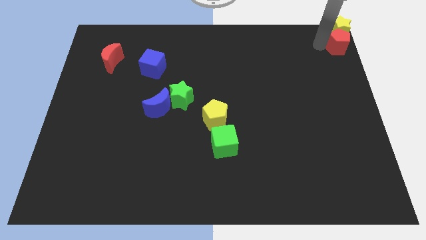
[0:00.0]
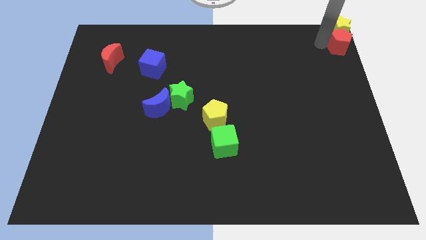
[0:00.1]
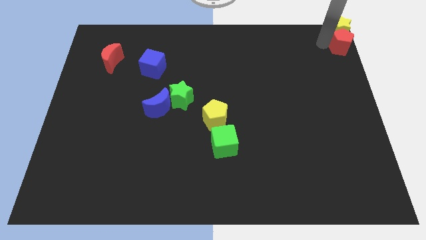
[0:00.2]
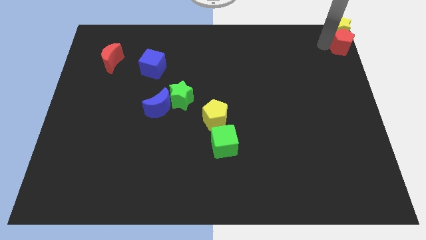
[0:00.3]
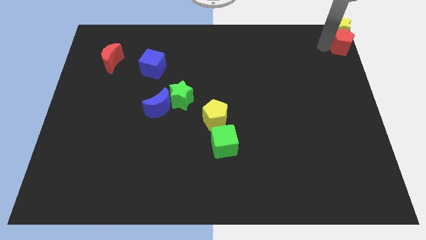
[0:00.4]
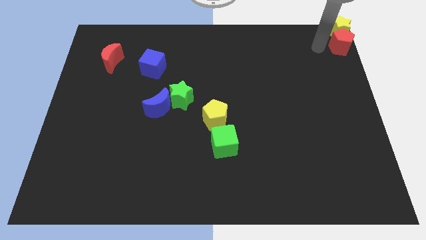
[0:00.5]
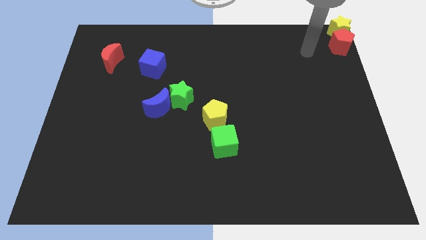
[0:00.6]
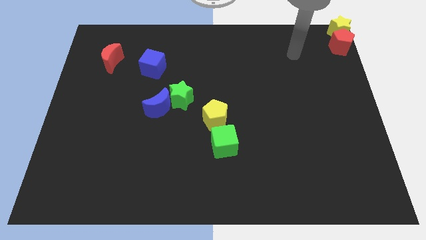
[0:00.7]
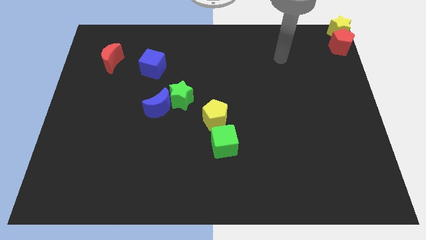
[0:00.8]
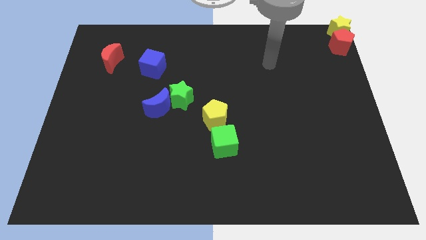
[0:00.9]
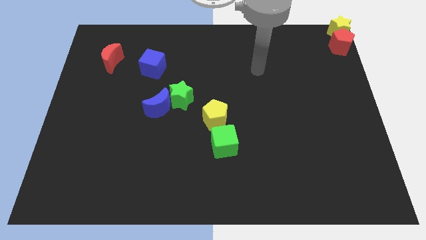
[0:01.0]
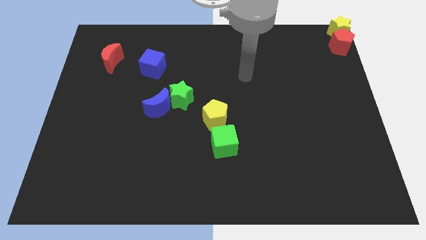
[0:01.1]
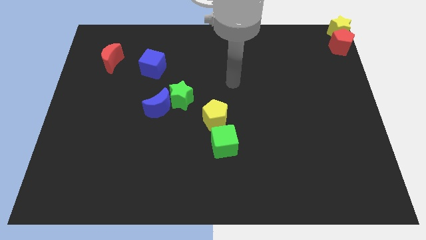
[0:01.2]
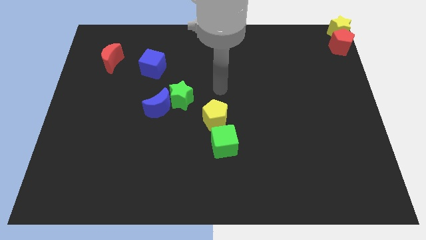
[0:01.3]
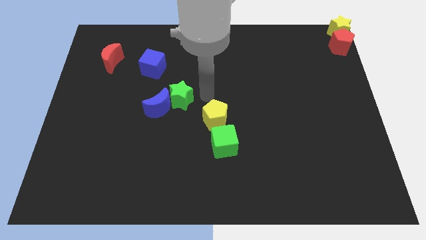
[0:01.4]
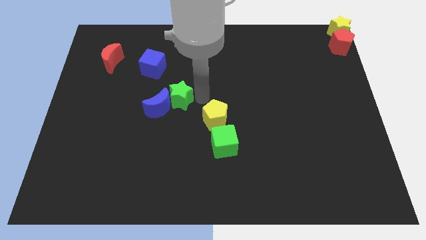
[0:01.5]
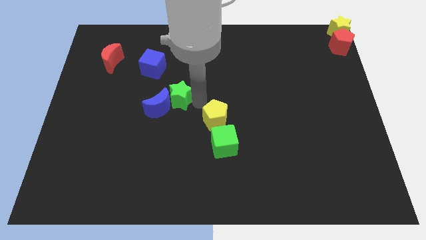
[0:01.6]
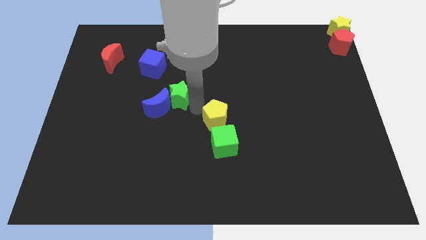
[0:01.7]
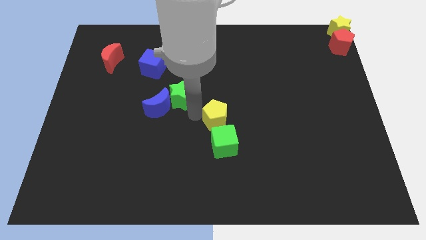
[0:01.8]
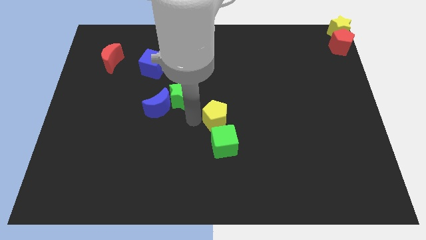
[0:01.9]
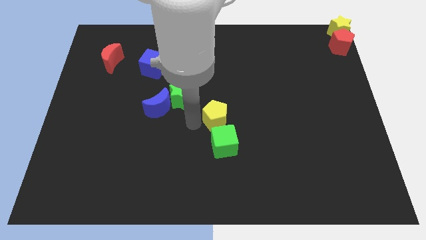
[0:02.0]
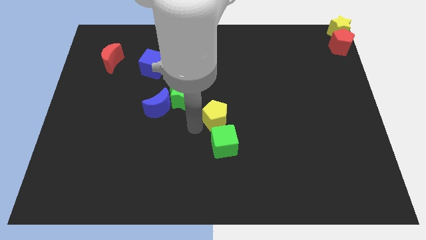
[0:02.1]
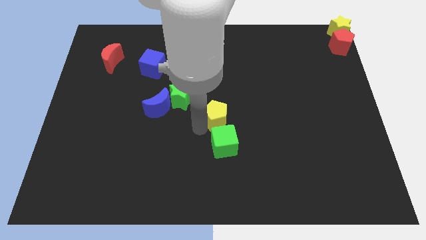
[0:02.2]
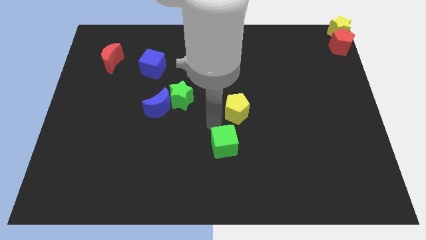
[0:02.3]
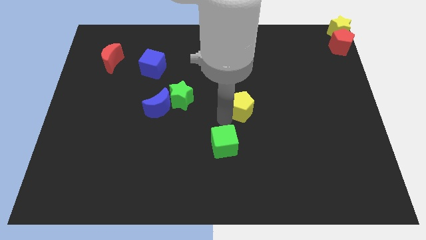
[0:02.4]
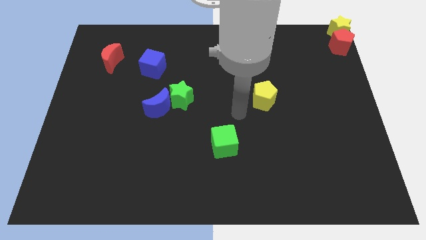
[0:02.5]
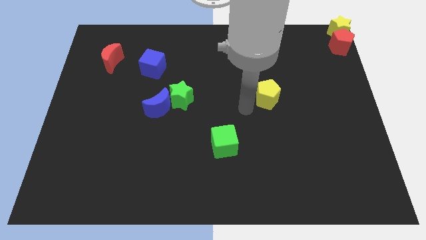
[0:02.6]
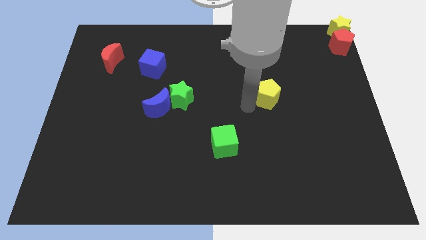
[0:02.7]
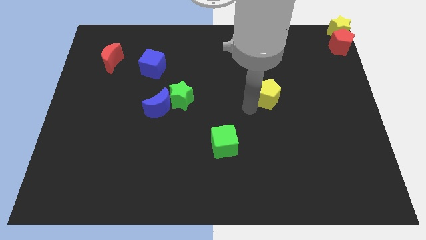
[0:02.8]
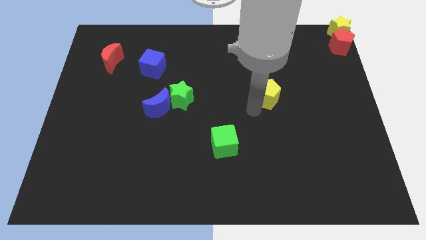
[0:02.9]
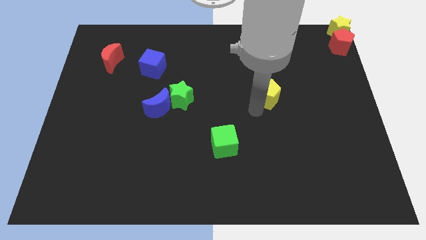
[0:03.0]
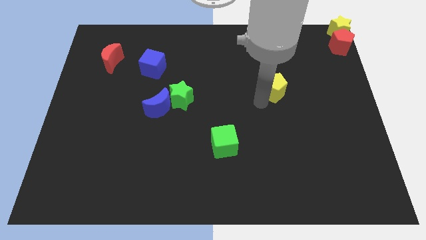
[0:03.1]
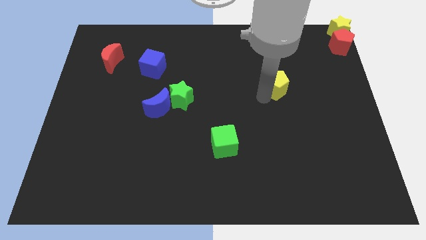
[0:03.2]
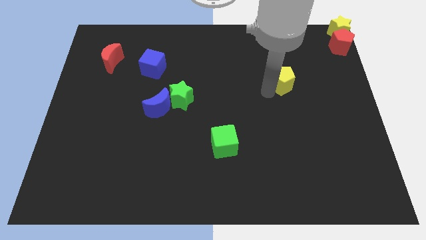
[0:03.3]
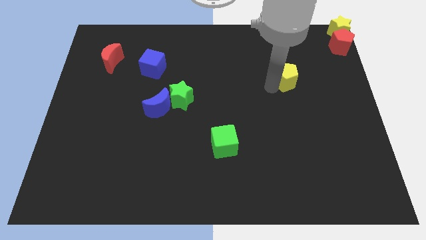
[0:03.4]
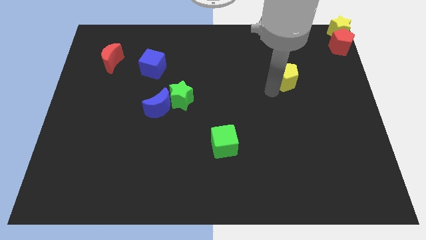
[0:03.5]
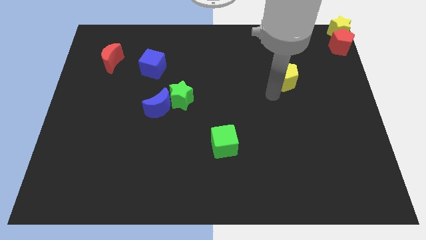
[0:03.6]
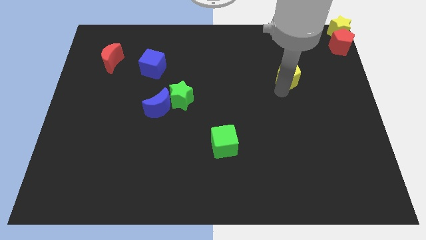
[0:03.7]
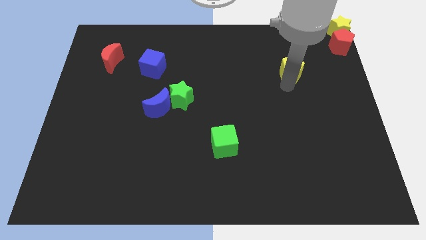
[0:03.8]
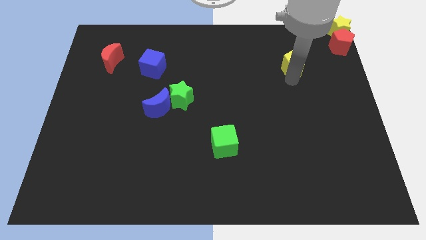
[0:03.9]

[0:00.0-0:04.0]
push yellow pentagon towards yellow star

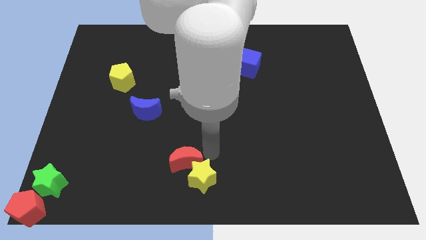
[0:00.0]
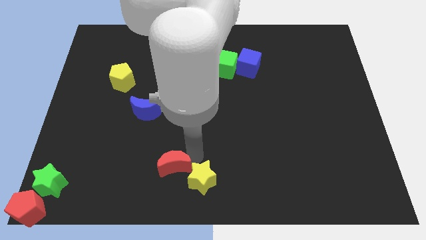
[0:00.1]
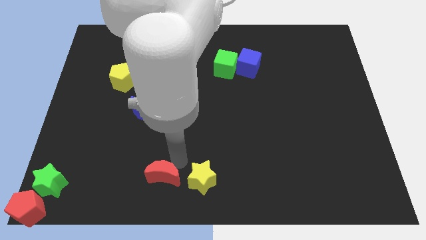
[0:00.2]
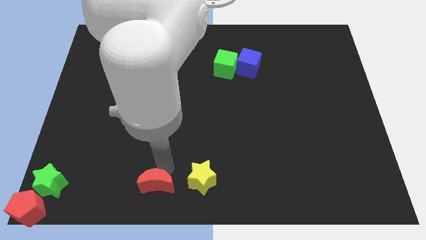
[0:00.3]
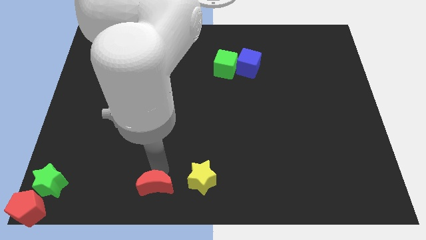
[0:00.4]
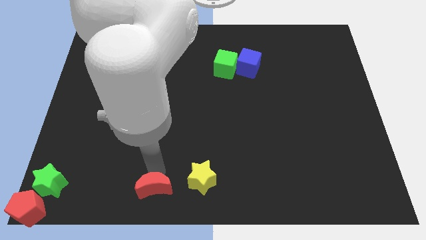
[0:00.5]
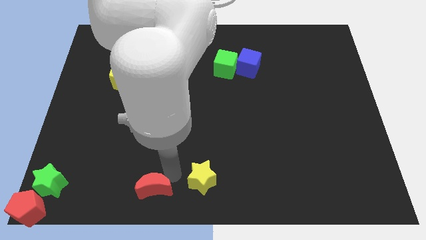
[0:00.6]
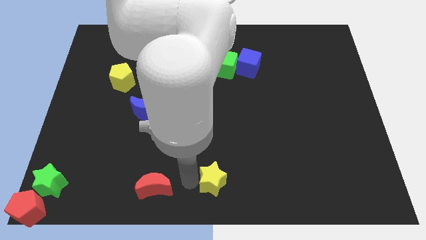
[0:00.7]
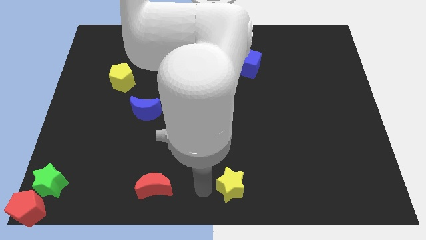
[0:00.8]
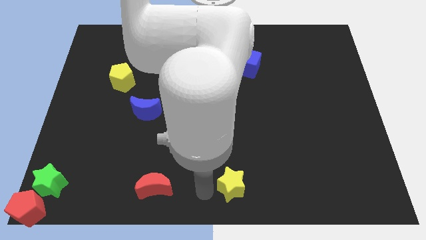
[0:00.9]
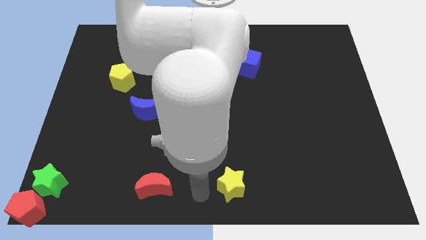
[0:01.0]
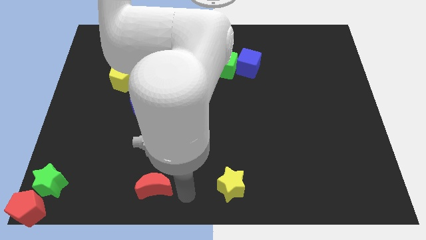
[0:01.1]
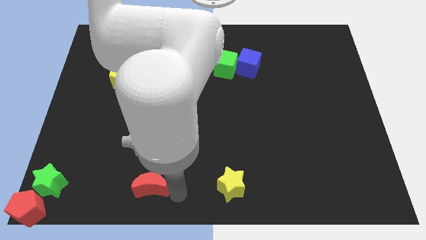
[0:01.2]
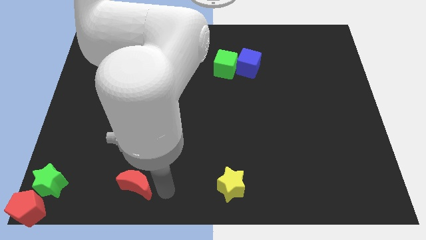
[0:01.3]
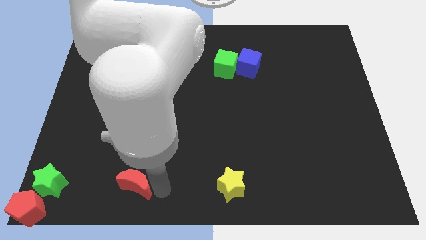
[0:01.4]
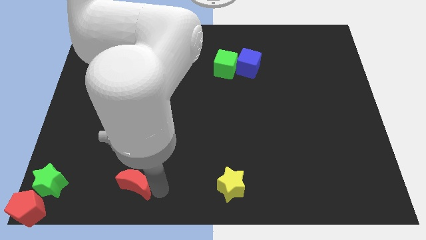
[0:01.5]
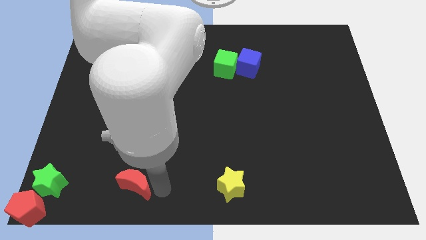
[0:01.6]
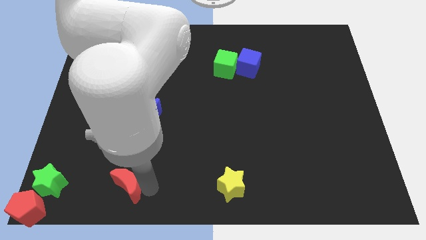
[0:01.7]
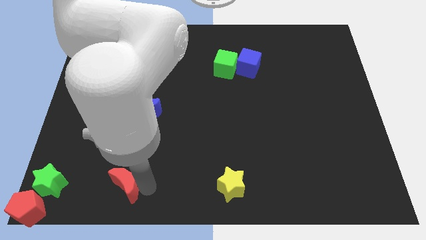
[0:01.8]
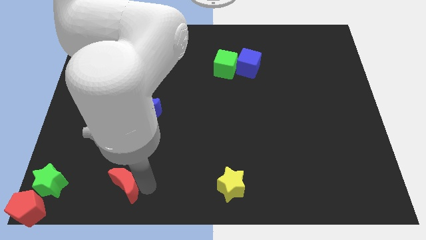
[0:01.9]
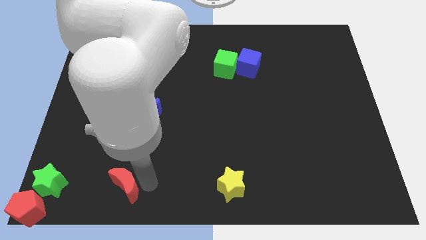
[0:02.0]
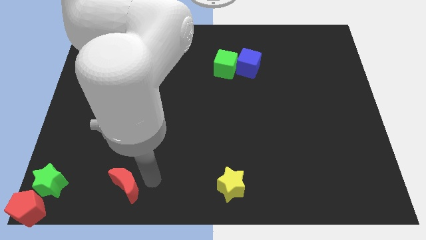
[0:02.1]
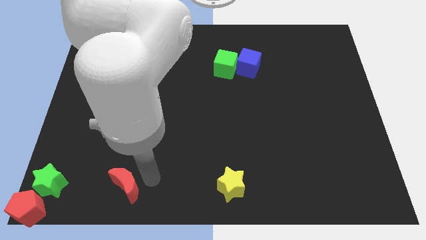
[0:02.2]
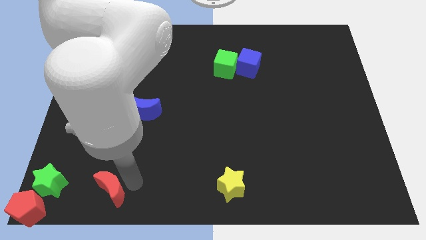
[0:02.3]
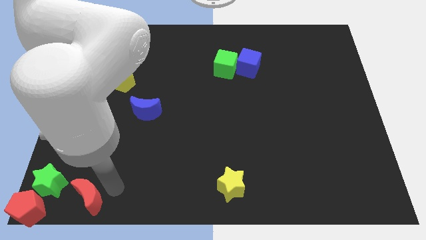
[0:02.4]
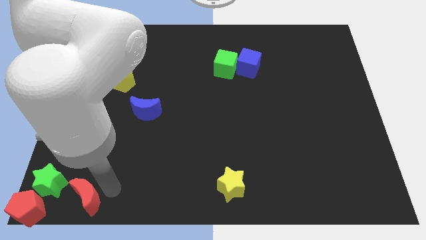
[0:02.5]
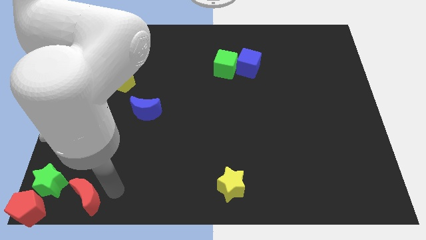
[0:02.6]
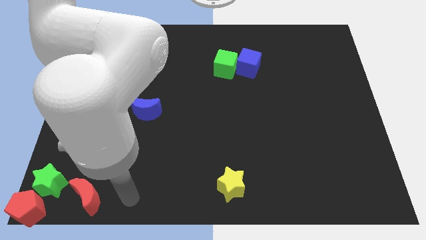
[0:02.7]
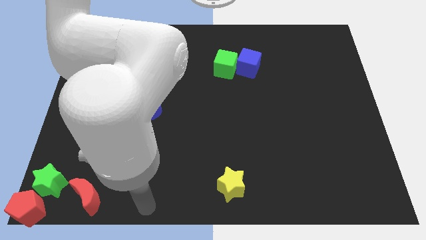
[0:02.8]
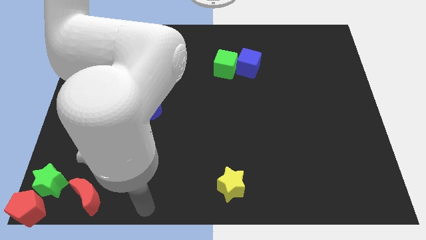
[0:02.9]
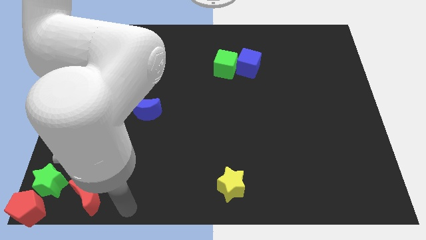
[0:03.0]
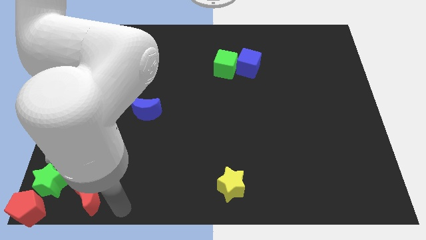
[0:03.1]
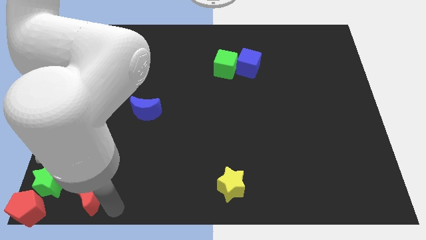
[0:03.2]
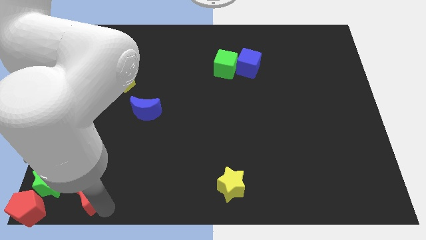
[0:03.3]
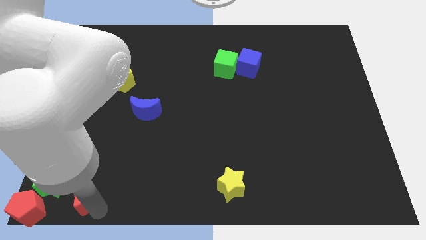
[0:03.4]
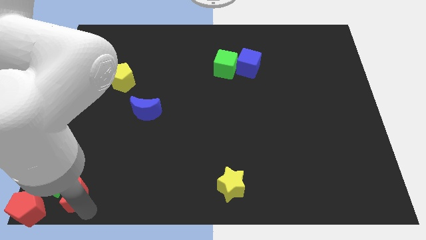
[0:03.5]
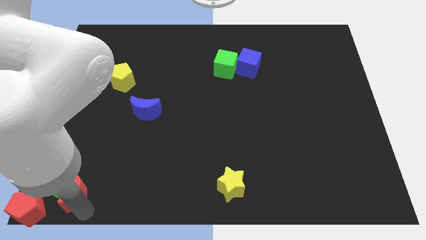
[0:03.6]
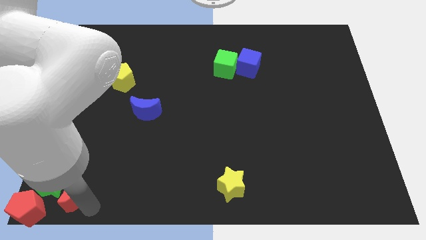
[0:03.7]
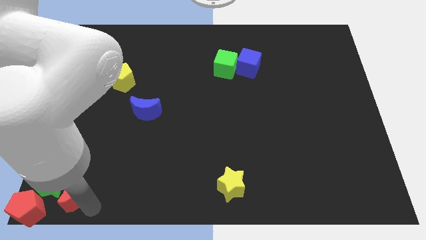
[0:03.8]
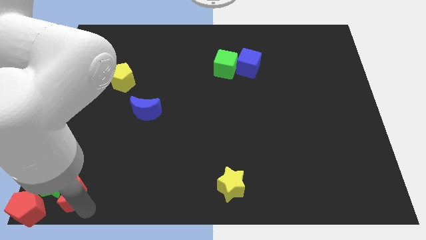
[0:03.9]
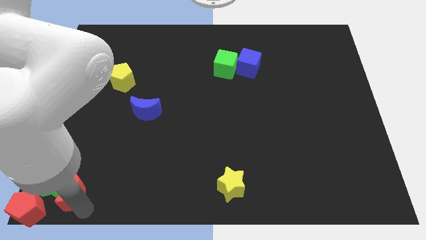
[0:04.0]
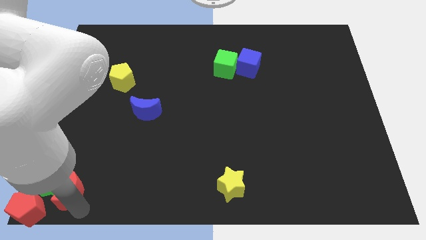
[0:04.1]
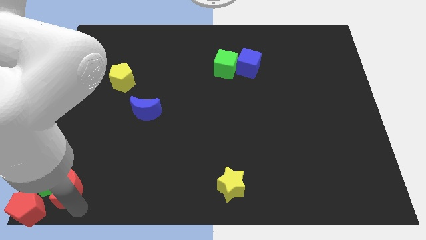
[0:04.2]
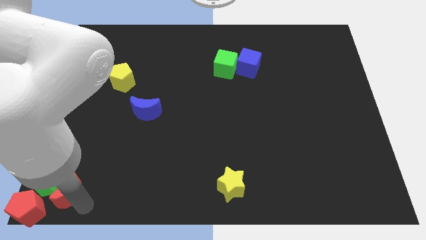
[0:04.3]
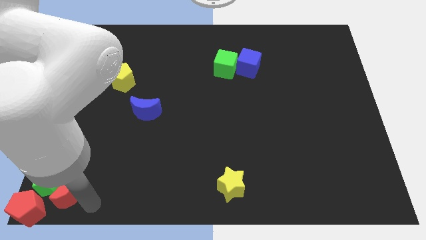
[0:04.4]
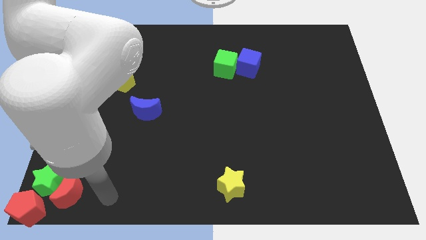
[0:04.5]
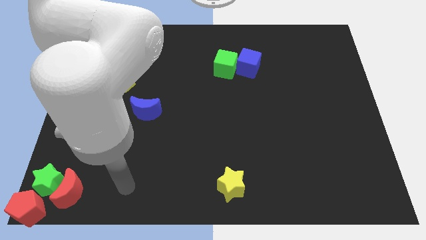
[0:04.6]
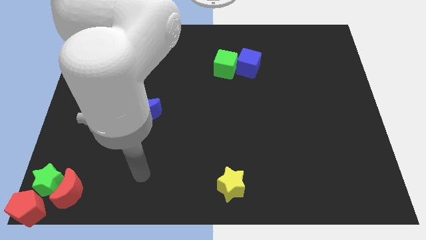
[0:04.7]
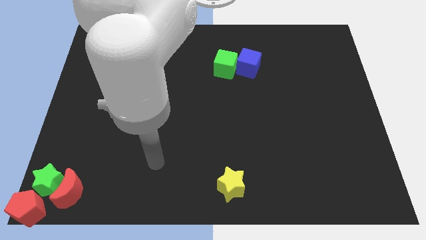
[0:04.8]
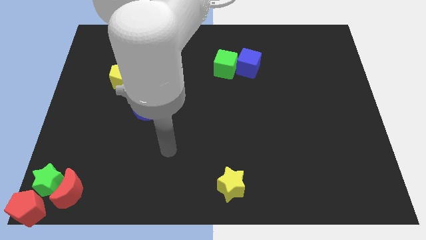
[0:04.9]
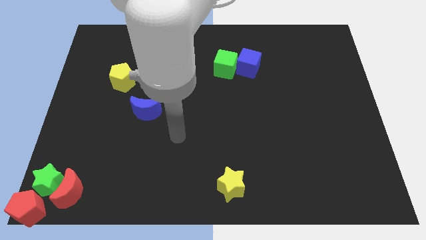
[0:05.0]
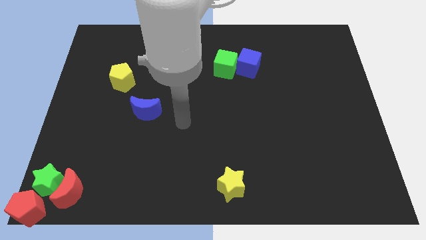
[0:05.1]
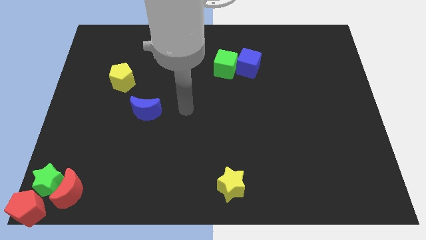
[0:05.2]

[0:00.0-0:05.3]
place the red crescent towards the right side of the green star
